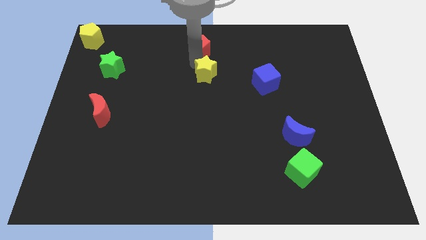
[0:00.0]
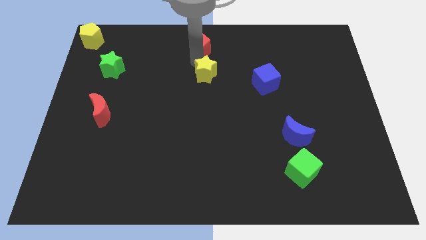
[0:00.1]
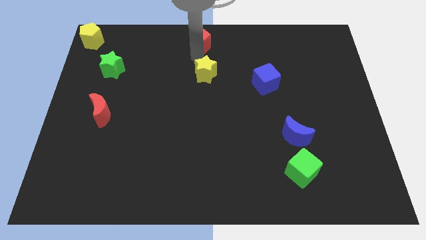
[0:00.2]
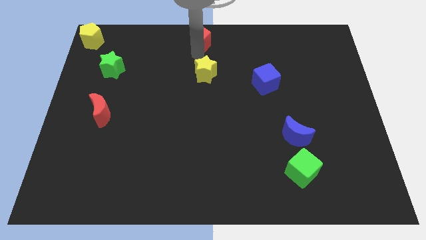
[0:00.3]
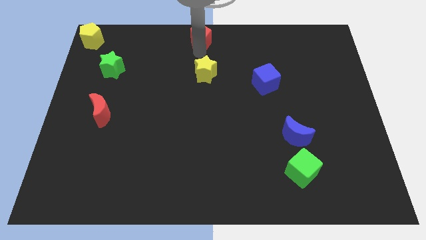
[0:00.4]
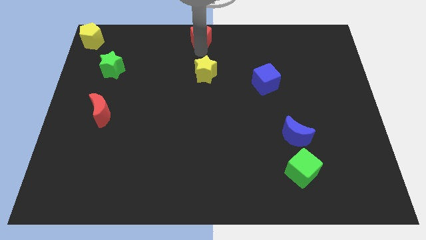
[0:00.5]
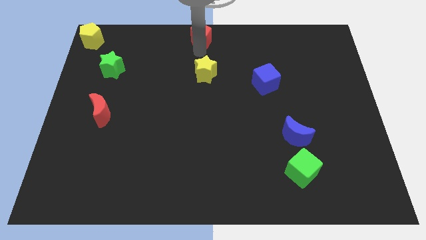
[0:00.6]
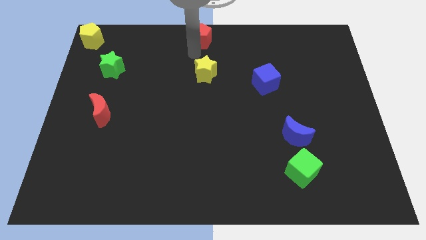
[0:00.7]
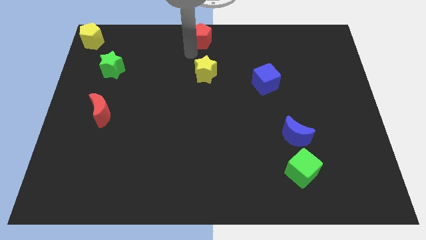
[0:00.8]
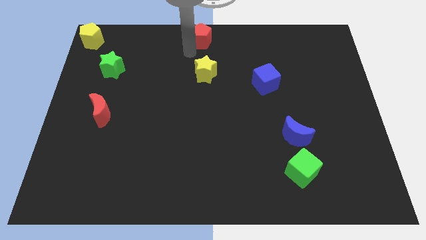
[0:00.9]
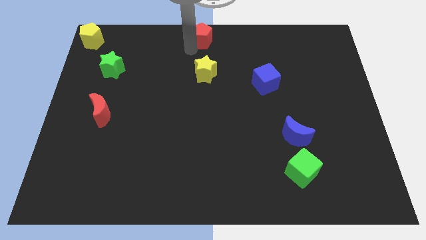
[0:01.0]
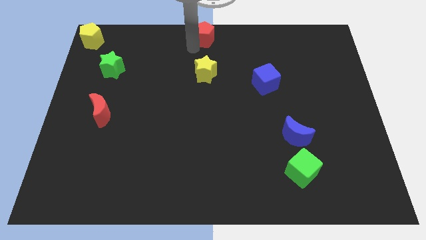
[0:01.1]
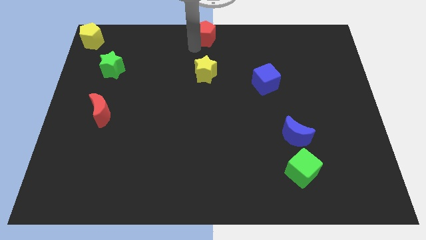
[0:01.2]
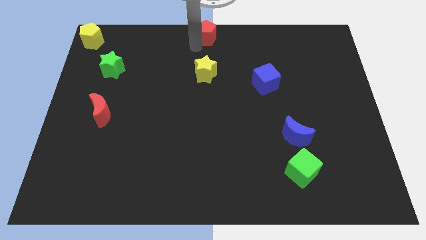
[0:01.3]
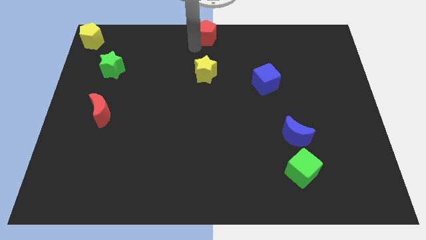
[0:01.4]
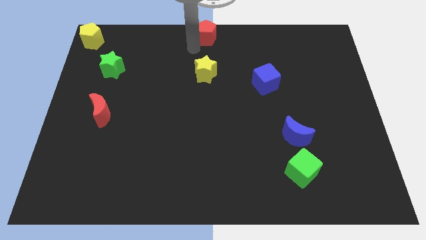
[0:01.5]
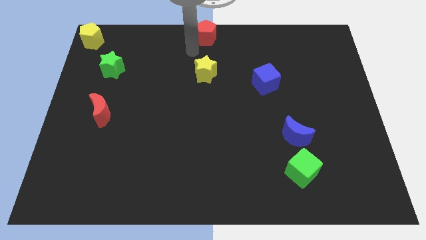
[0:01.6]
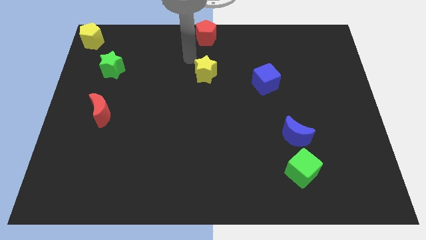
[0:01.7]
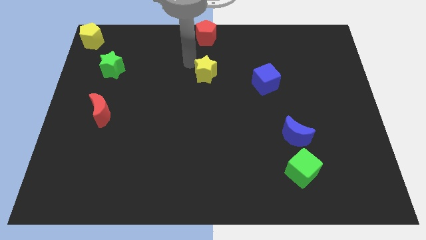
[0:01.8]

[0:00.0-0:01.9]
move the red pentagon to the top center of the board

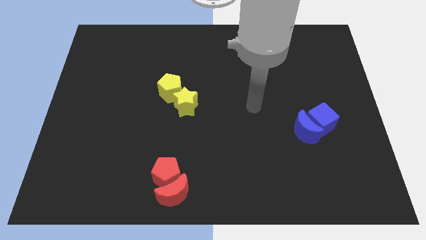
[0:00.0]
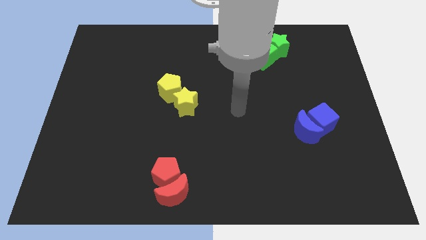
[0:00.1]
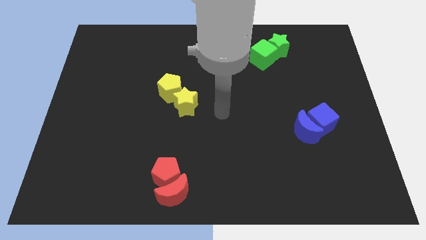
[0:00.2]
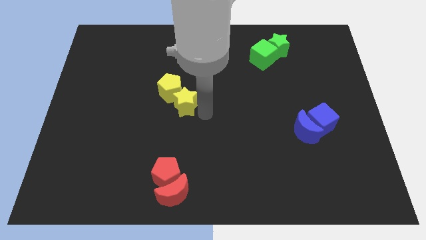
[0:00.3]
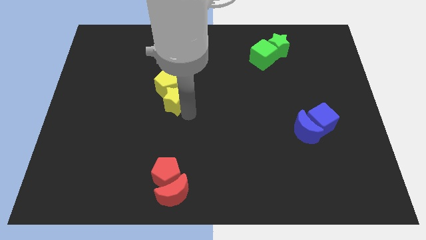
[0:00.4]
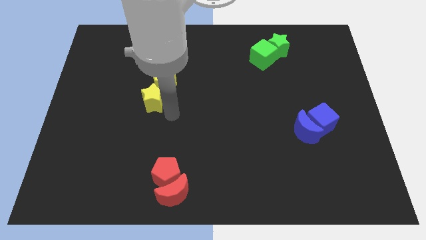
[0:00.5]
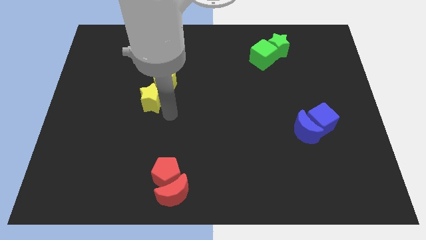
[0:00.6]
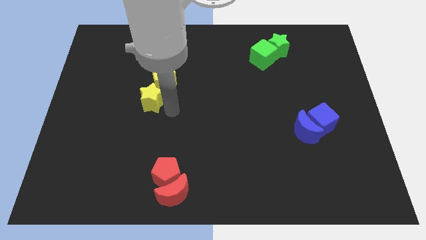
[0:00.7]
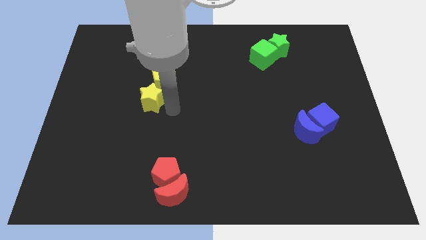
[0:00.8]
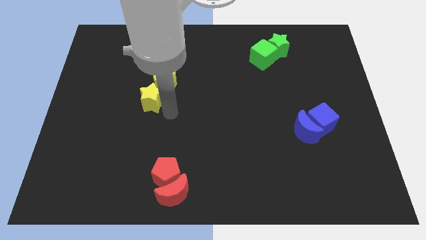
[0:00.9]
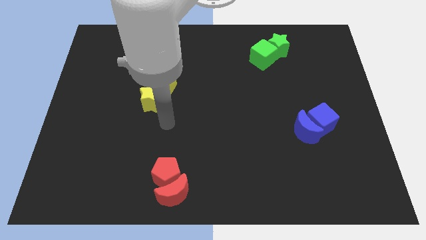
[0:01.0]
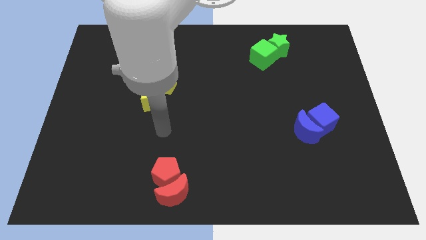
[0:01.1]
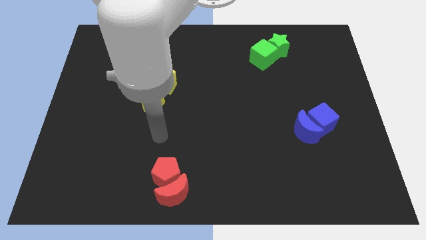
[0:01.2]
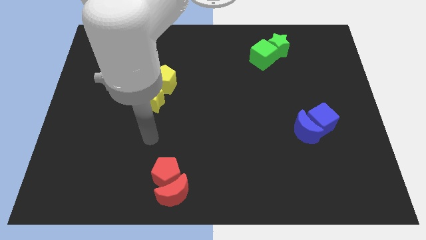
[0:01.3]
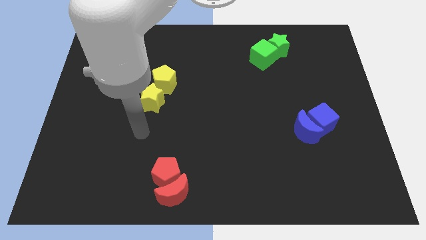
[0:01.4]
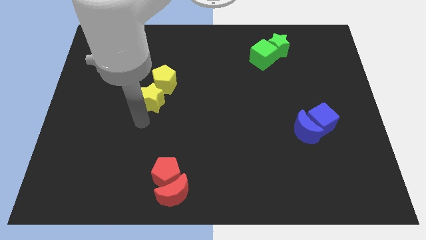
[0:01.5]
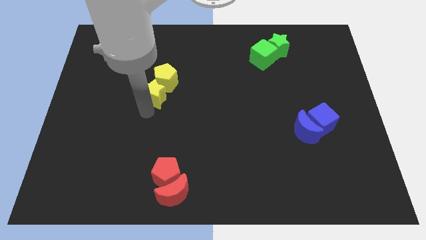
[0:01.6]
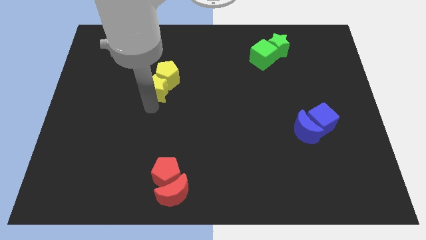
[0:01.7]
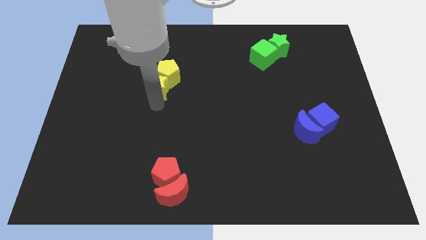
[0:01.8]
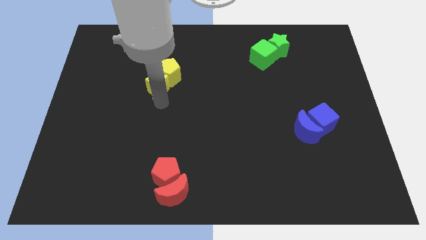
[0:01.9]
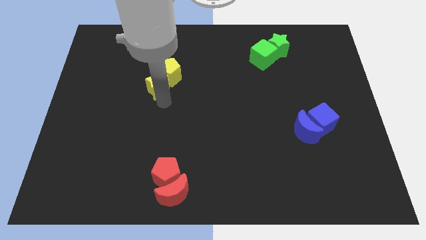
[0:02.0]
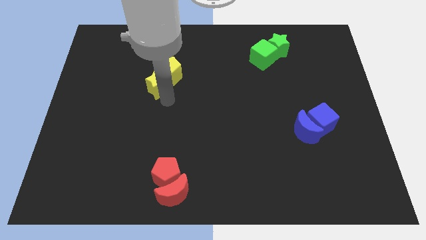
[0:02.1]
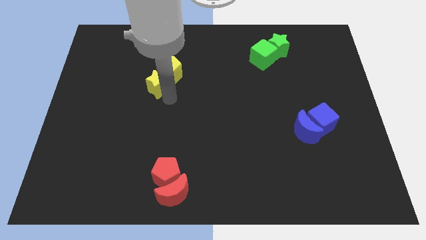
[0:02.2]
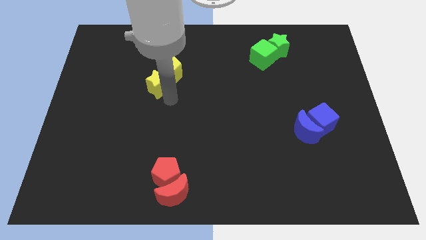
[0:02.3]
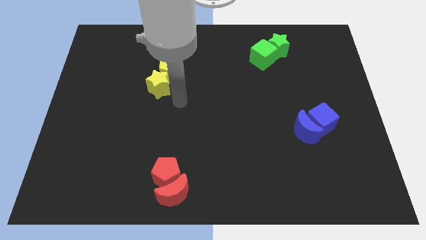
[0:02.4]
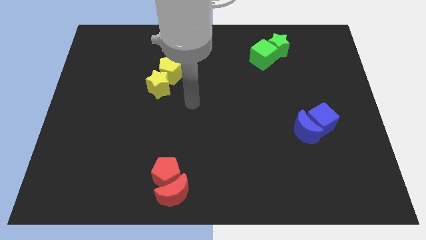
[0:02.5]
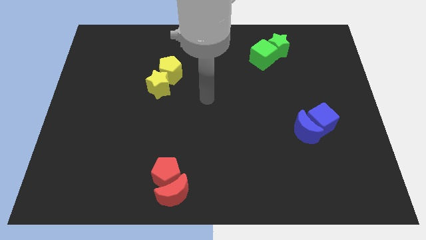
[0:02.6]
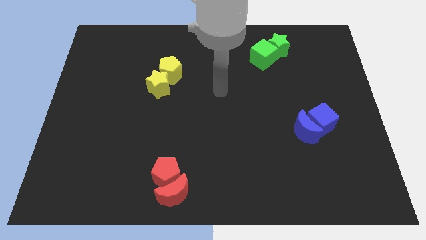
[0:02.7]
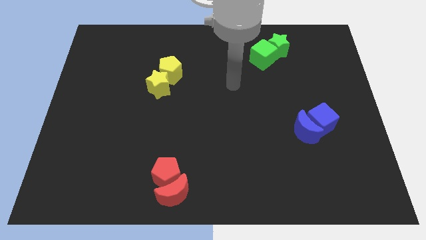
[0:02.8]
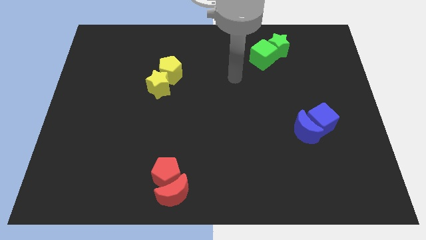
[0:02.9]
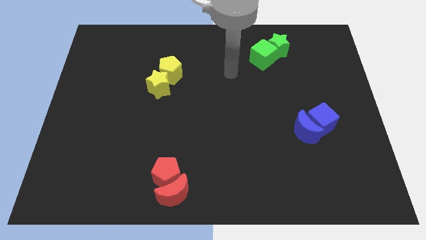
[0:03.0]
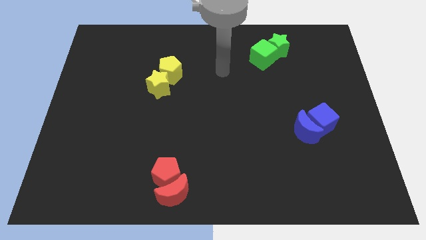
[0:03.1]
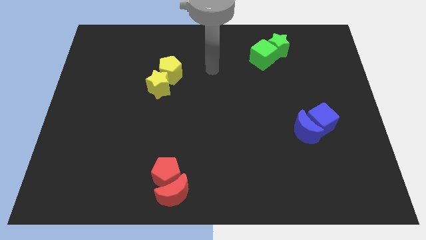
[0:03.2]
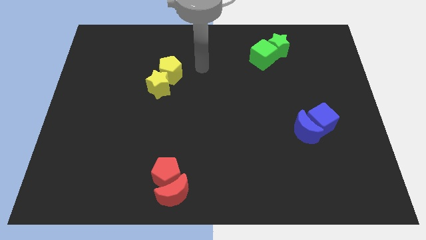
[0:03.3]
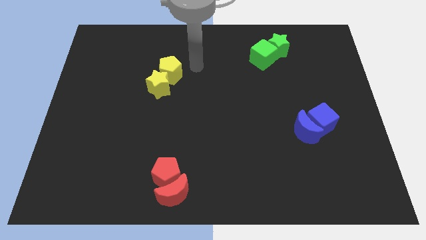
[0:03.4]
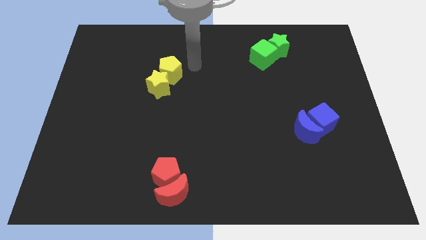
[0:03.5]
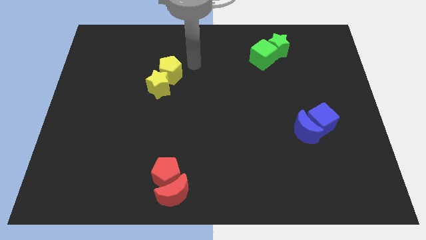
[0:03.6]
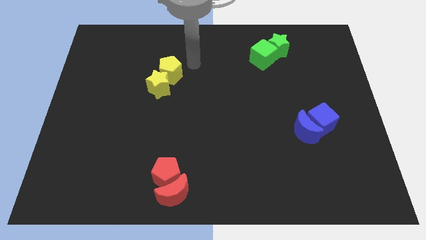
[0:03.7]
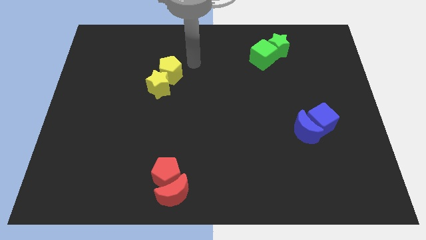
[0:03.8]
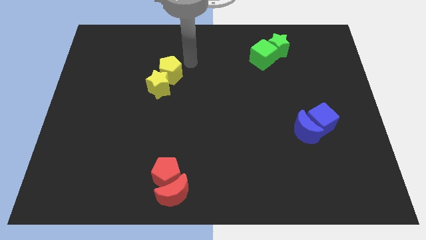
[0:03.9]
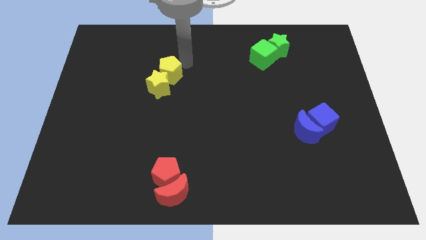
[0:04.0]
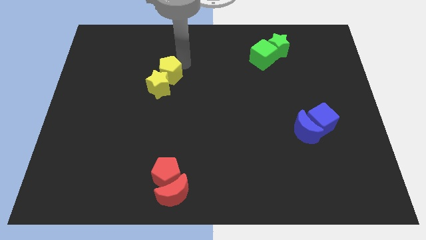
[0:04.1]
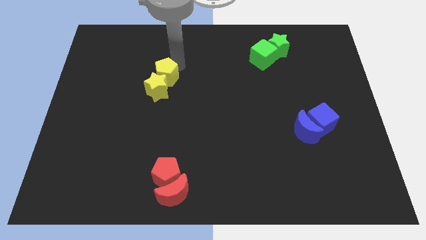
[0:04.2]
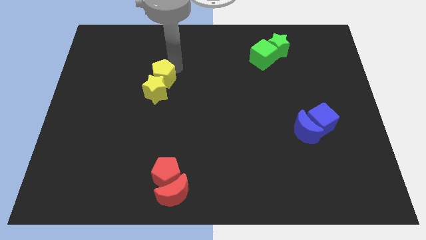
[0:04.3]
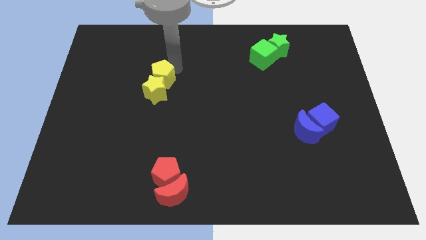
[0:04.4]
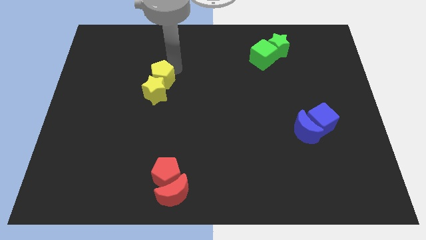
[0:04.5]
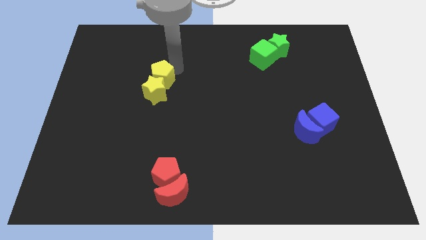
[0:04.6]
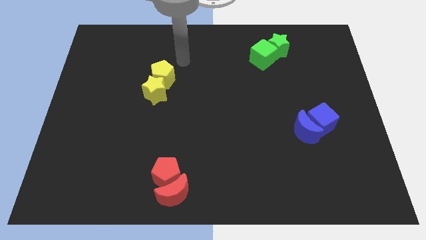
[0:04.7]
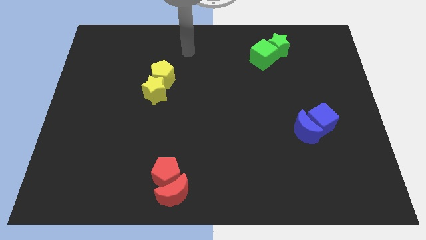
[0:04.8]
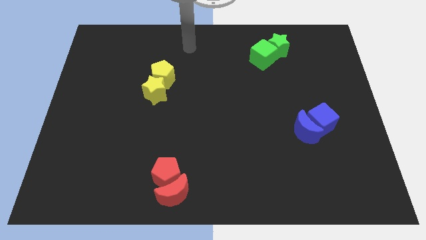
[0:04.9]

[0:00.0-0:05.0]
adjust the yellow blocks diagonal top left red blocks

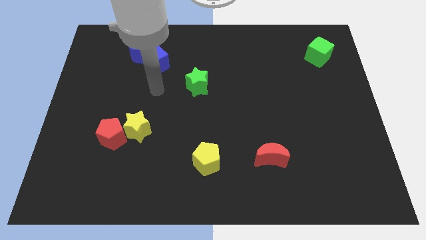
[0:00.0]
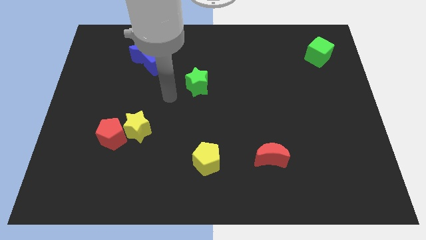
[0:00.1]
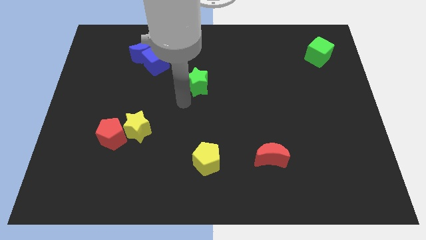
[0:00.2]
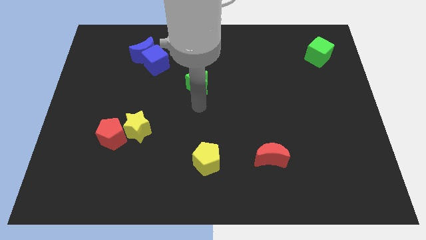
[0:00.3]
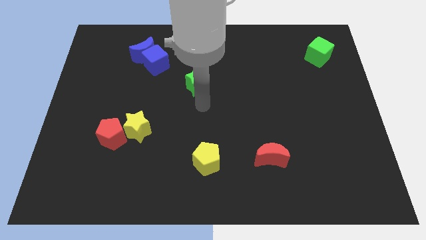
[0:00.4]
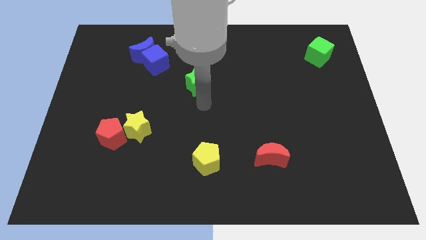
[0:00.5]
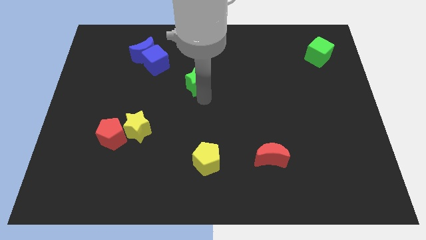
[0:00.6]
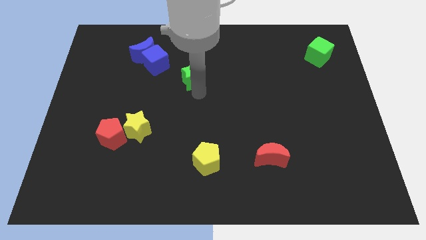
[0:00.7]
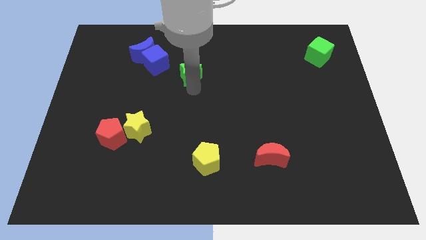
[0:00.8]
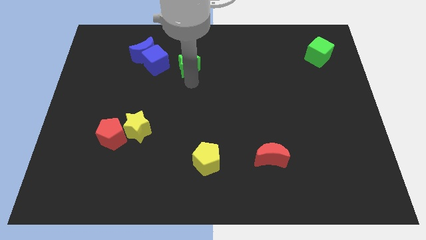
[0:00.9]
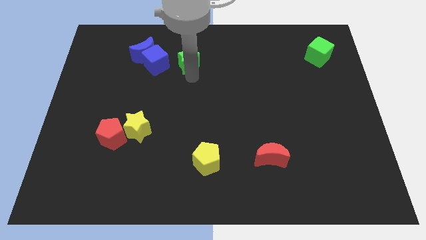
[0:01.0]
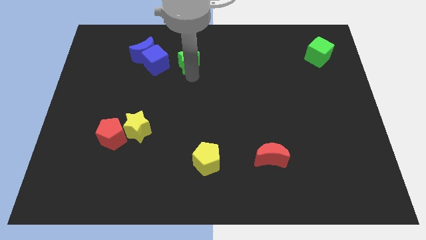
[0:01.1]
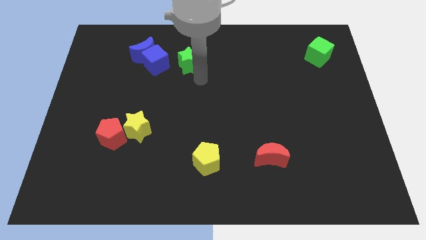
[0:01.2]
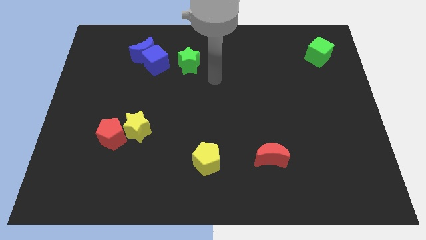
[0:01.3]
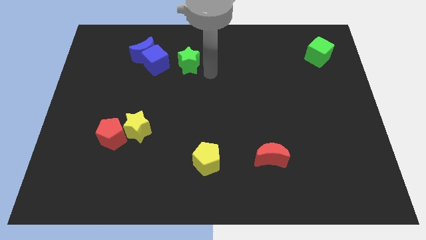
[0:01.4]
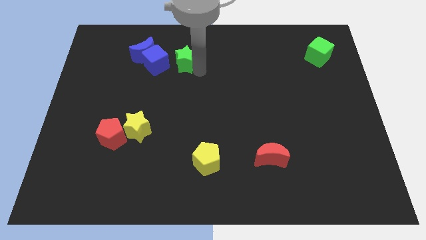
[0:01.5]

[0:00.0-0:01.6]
move the green star to the right of the blue cube

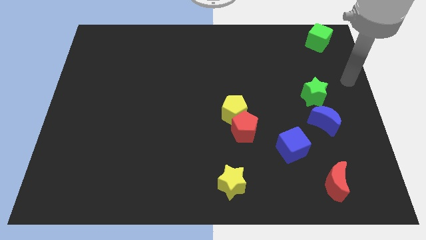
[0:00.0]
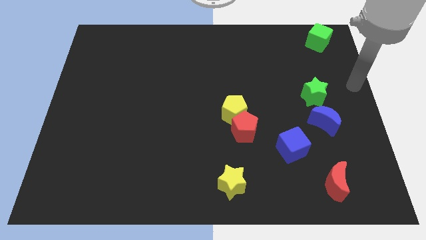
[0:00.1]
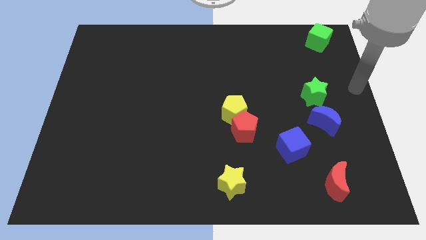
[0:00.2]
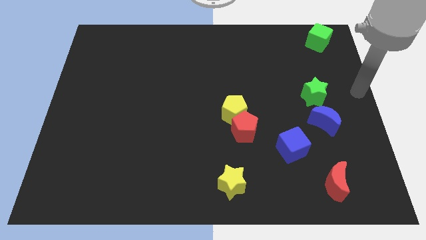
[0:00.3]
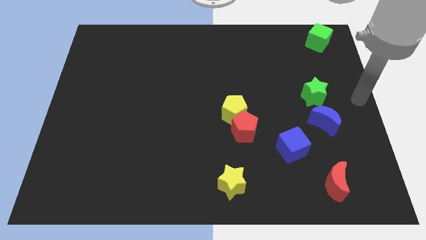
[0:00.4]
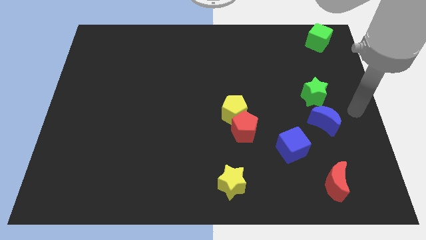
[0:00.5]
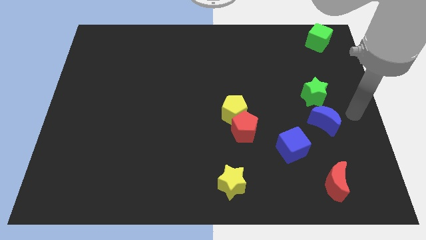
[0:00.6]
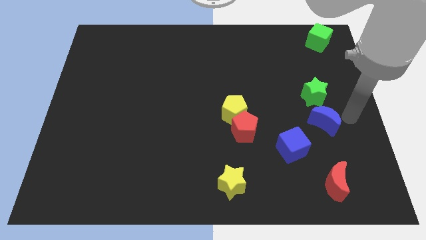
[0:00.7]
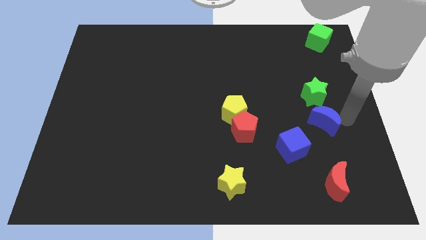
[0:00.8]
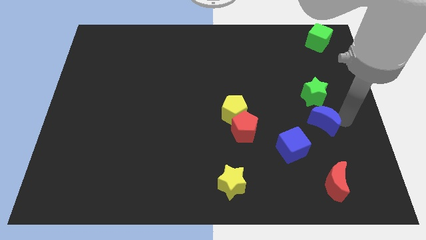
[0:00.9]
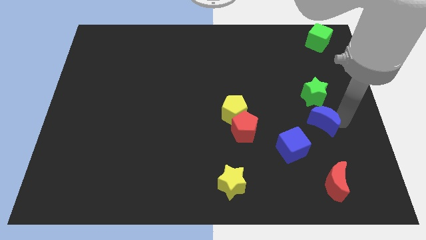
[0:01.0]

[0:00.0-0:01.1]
touch the right side of the blue crescent
